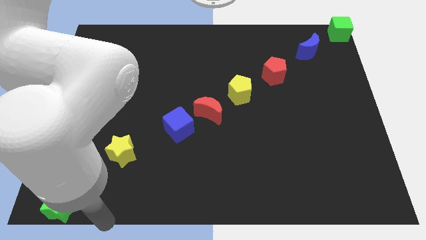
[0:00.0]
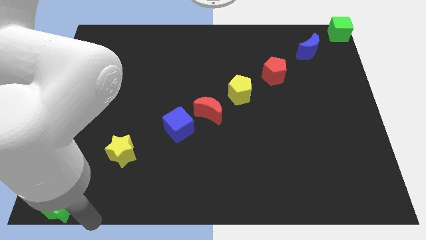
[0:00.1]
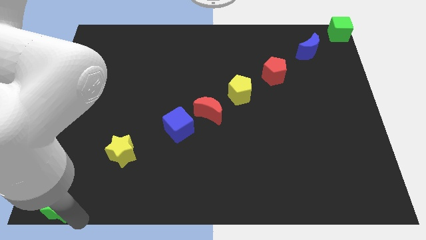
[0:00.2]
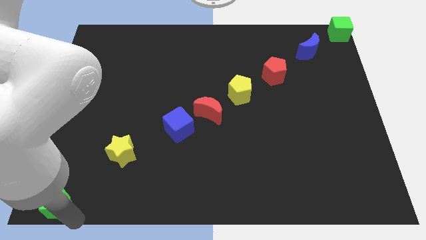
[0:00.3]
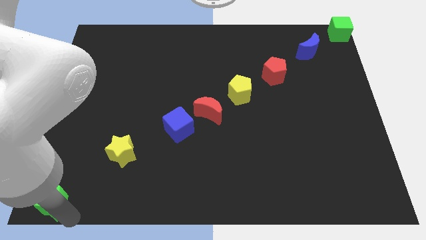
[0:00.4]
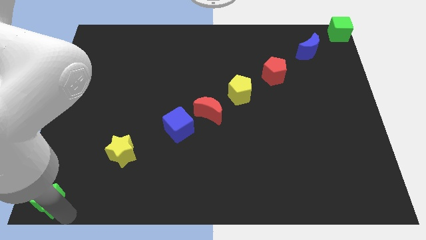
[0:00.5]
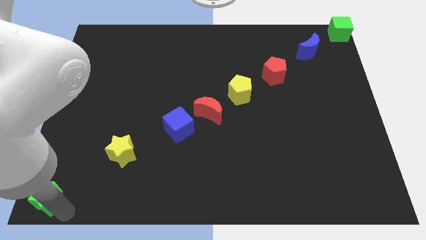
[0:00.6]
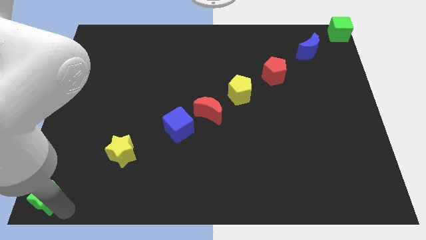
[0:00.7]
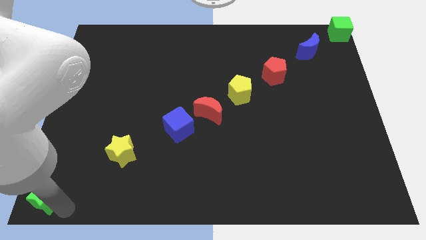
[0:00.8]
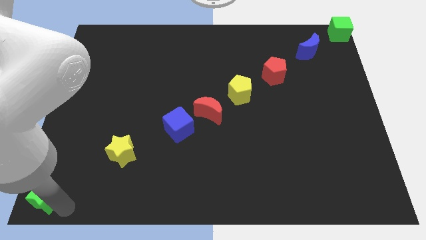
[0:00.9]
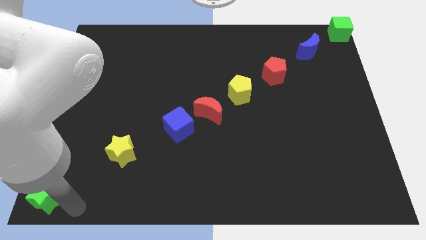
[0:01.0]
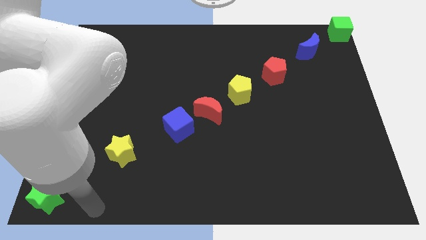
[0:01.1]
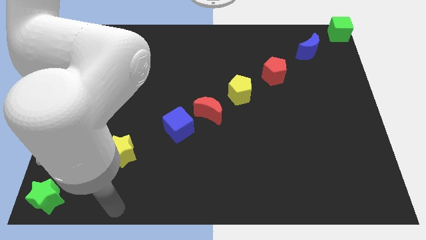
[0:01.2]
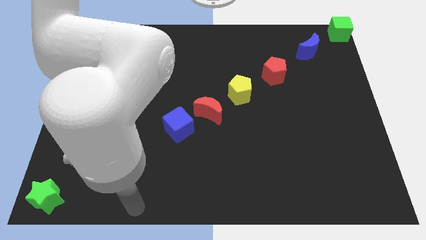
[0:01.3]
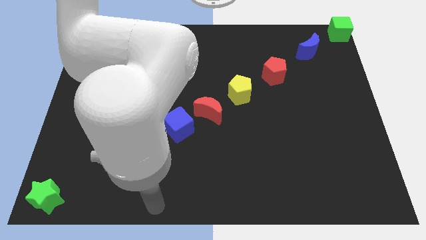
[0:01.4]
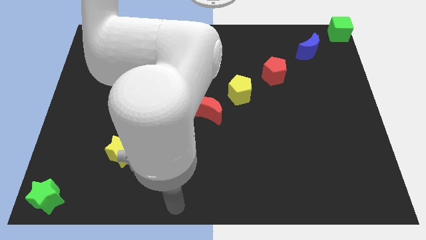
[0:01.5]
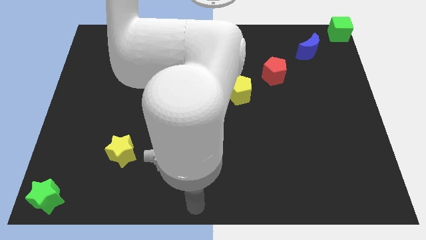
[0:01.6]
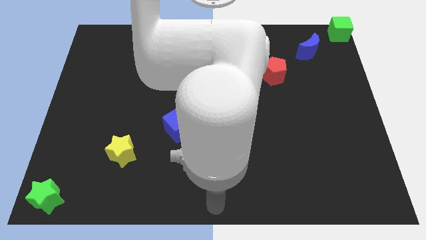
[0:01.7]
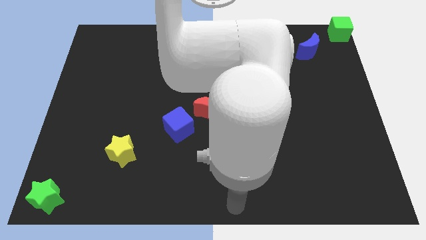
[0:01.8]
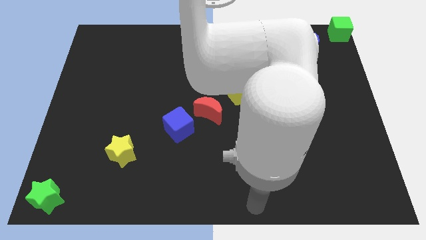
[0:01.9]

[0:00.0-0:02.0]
push the green star to the bottom left corner

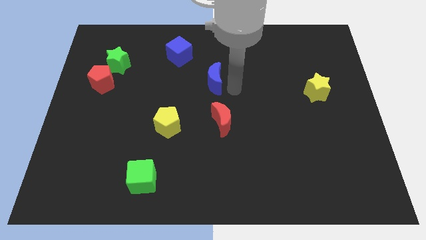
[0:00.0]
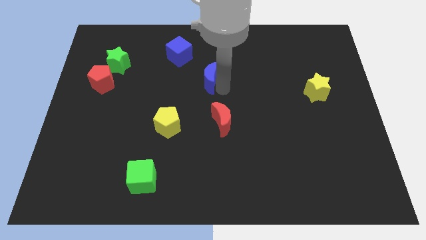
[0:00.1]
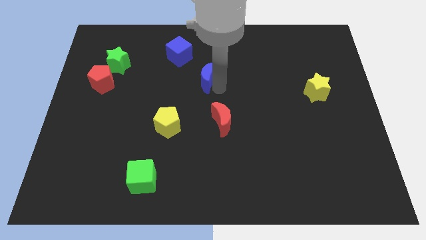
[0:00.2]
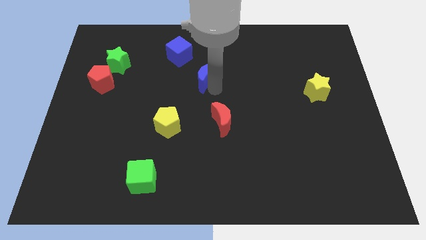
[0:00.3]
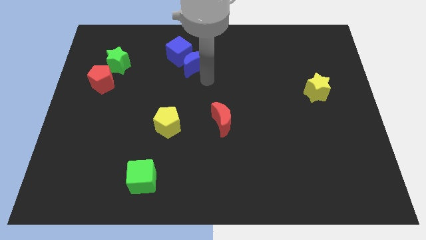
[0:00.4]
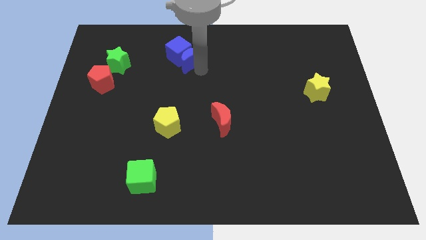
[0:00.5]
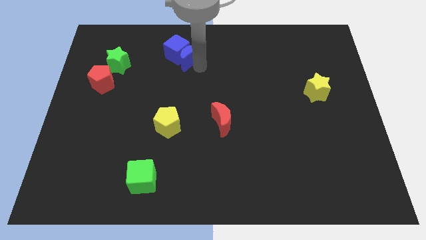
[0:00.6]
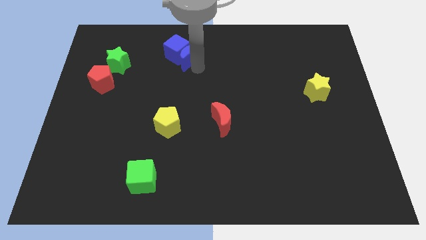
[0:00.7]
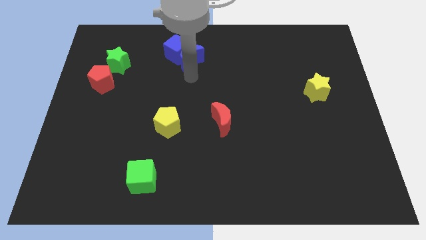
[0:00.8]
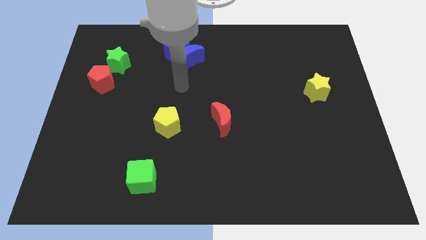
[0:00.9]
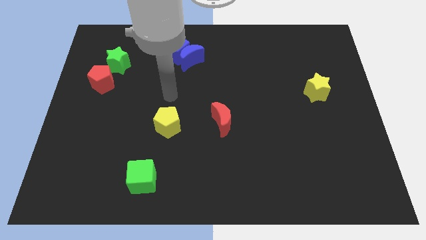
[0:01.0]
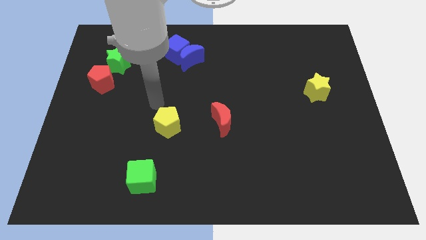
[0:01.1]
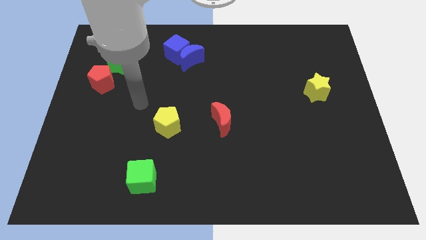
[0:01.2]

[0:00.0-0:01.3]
move blue crescent into blue cube

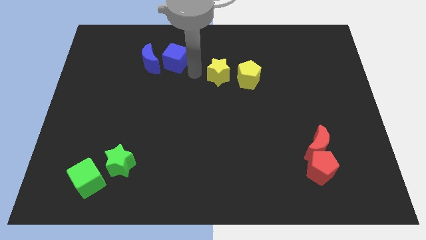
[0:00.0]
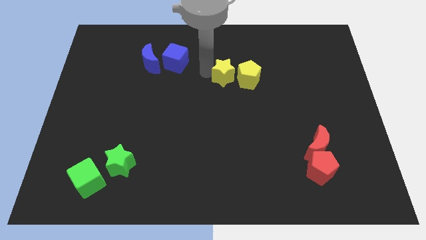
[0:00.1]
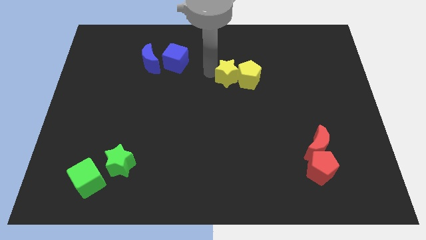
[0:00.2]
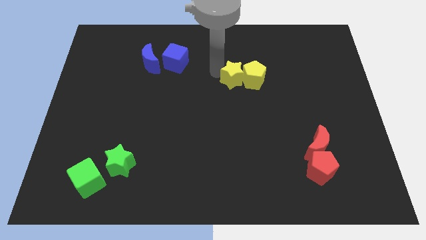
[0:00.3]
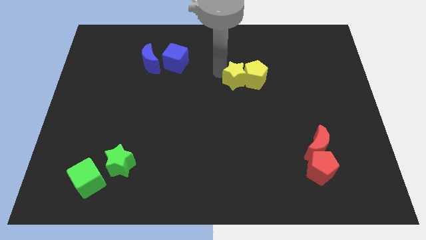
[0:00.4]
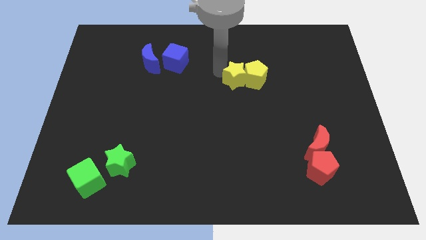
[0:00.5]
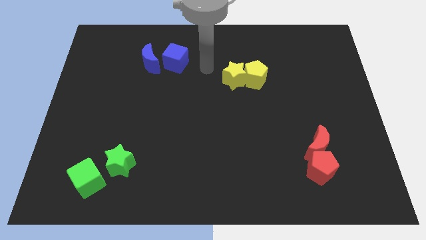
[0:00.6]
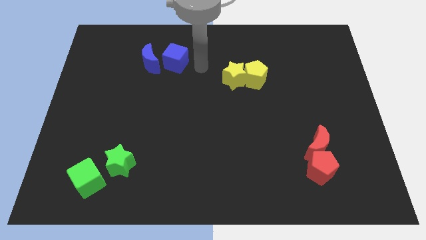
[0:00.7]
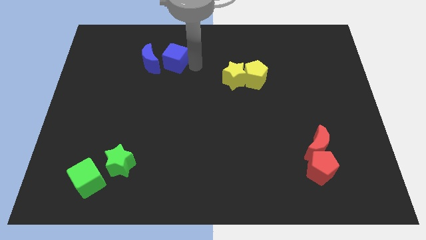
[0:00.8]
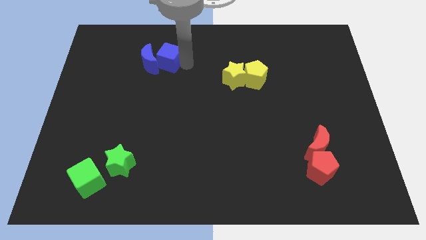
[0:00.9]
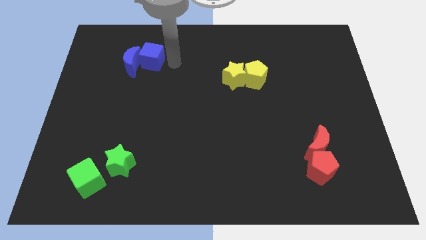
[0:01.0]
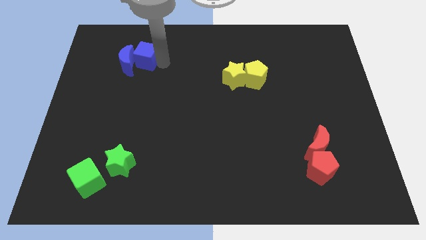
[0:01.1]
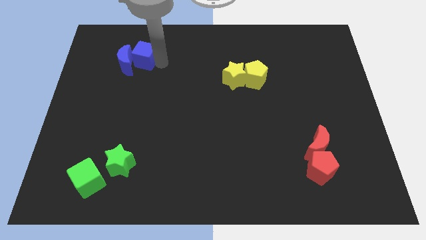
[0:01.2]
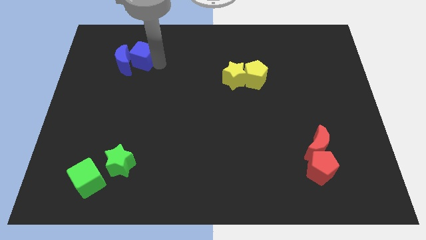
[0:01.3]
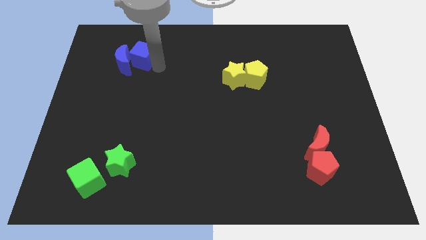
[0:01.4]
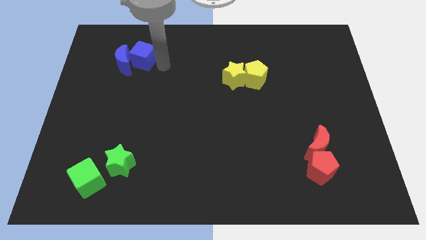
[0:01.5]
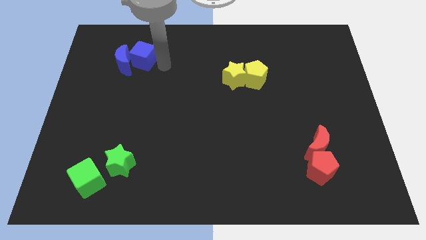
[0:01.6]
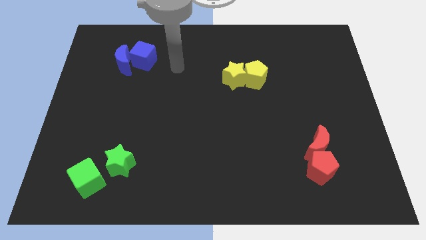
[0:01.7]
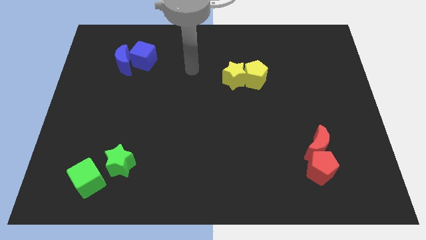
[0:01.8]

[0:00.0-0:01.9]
put the yellow and blue blocks together

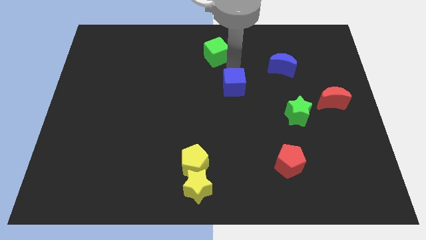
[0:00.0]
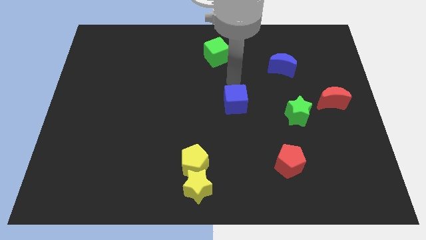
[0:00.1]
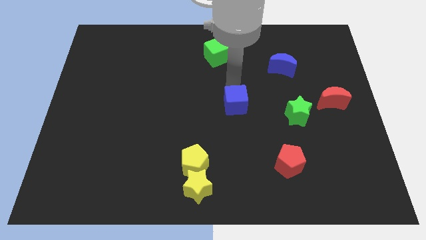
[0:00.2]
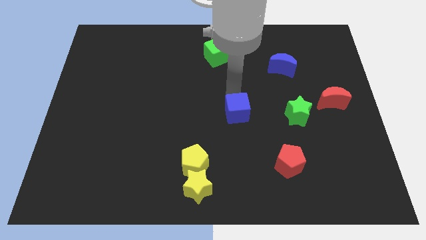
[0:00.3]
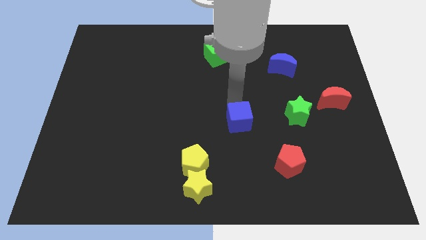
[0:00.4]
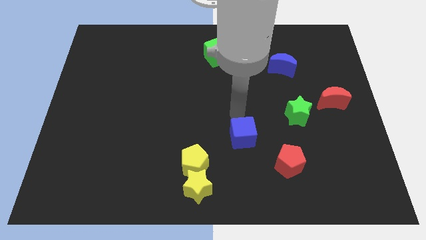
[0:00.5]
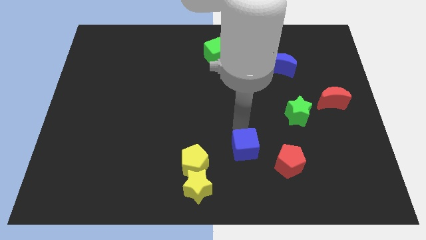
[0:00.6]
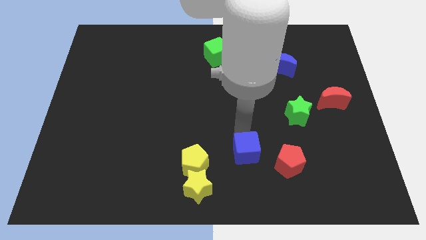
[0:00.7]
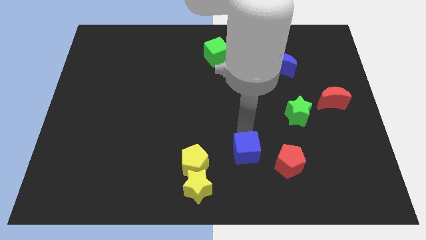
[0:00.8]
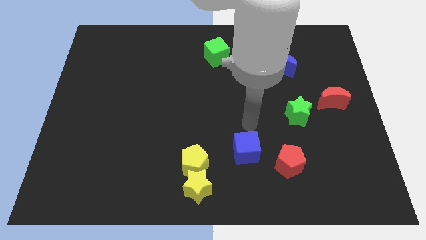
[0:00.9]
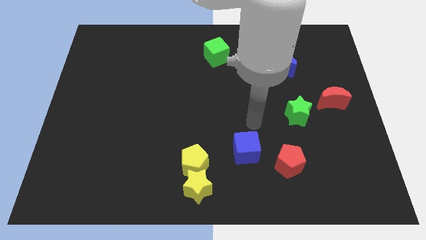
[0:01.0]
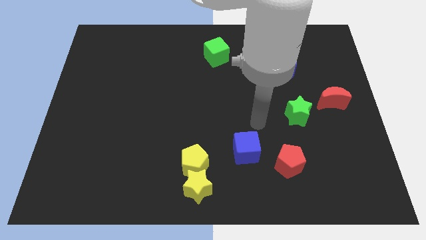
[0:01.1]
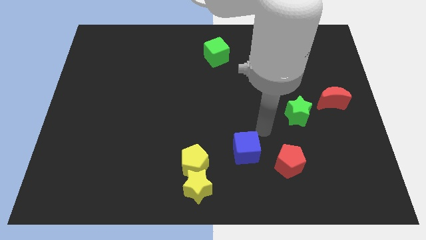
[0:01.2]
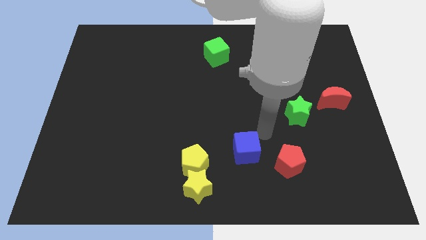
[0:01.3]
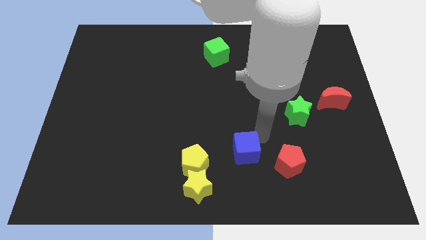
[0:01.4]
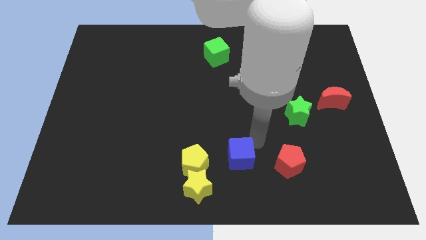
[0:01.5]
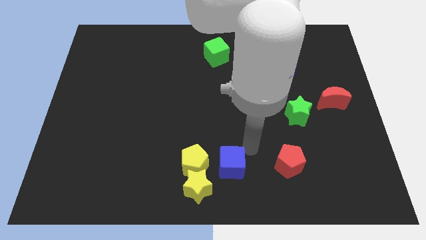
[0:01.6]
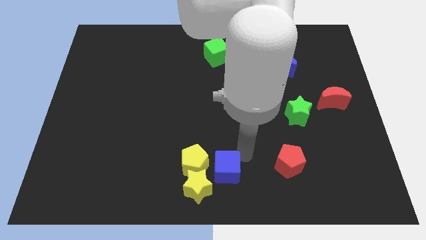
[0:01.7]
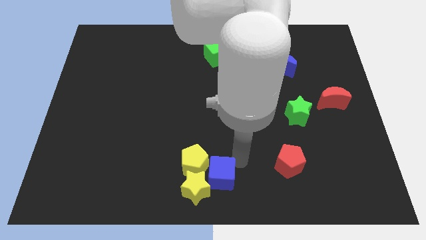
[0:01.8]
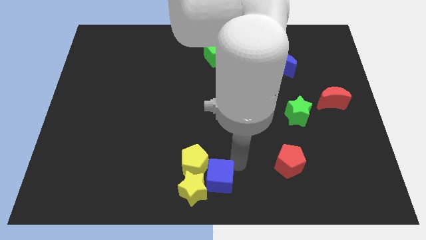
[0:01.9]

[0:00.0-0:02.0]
place the blue cube to the right of the yellow blocks

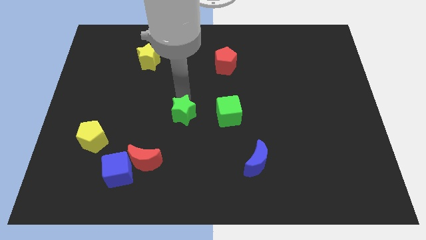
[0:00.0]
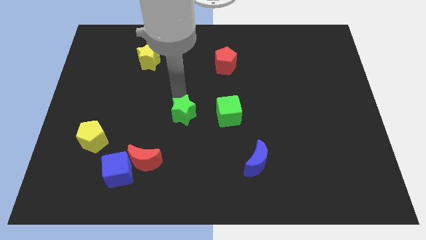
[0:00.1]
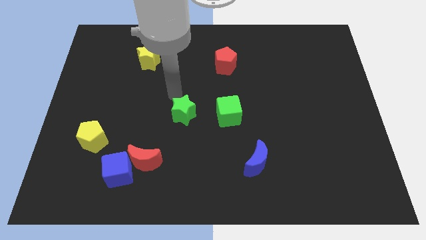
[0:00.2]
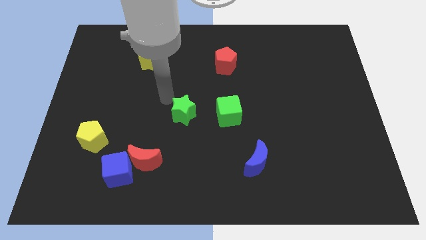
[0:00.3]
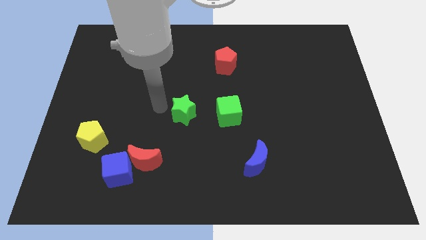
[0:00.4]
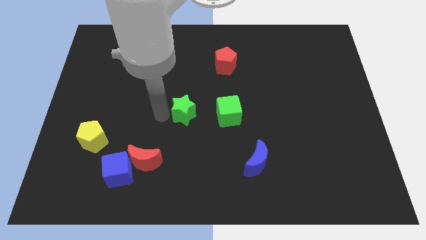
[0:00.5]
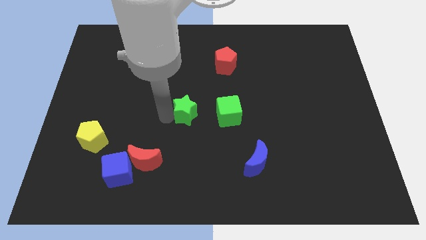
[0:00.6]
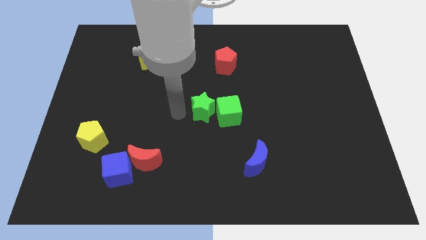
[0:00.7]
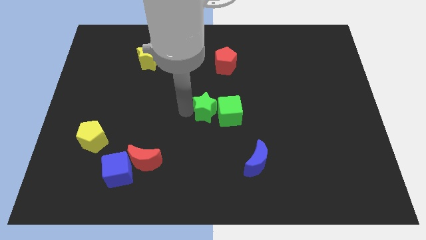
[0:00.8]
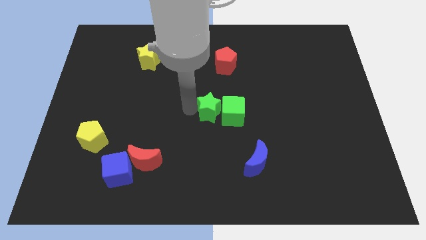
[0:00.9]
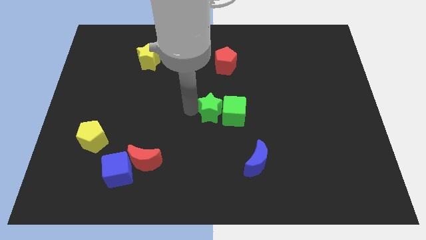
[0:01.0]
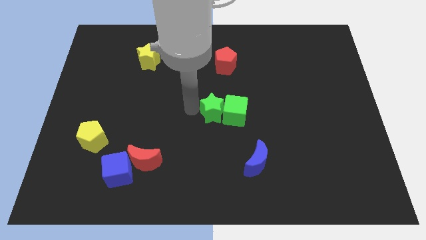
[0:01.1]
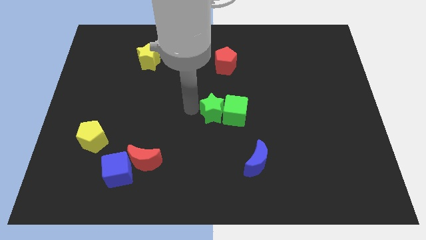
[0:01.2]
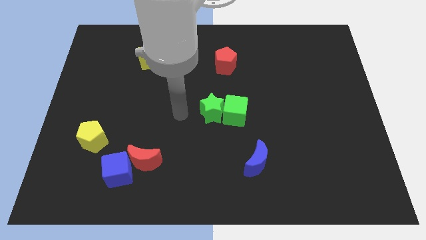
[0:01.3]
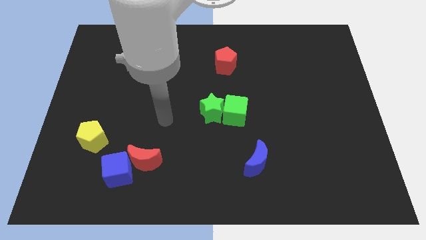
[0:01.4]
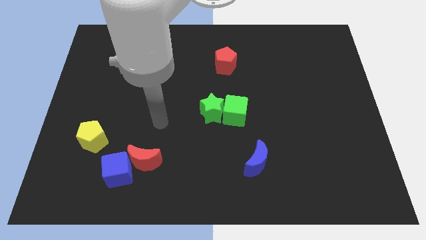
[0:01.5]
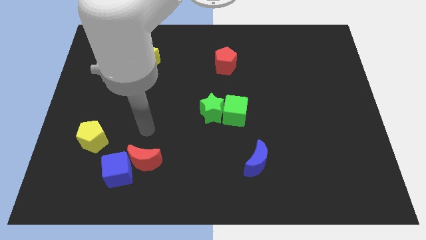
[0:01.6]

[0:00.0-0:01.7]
move green star into the green cube

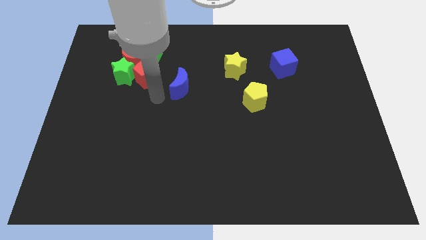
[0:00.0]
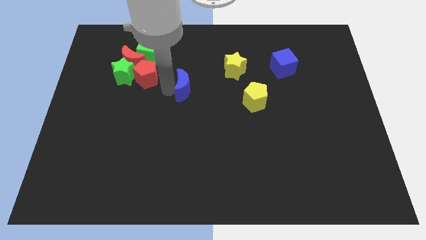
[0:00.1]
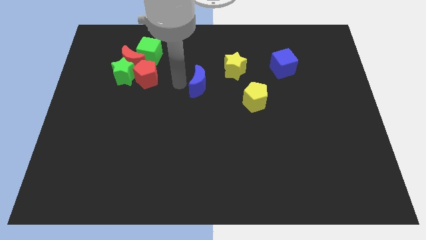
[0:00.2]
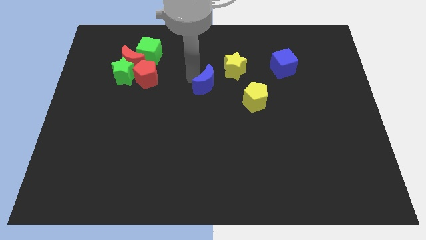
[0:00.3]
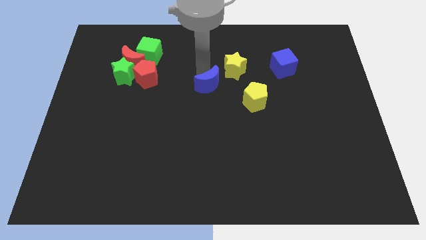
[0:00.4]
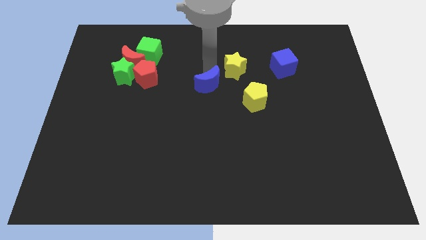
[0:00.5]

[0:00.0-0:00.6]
move the blue crescent near the yellow star
